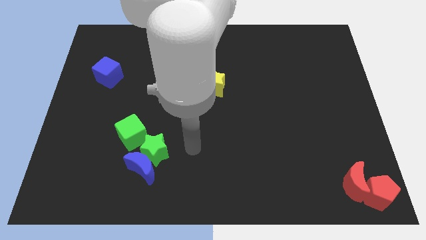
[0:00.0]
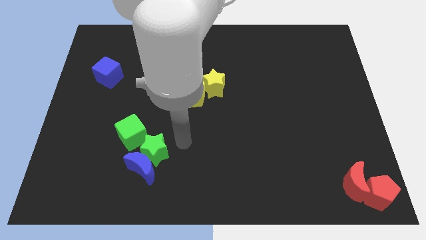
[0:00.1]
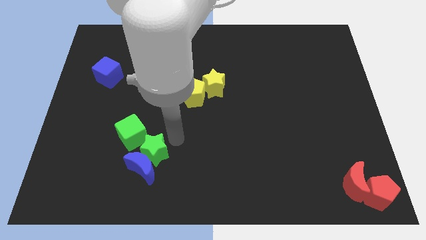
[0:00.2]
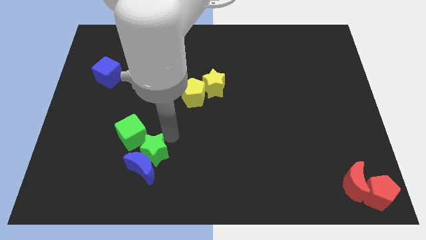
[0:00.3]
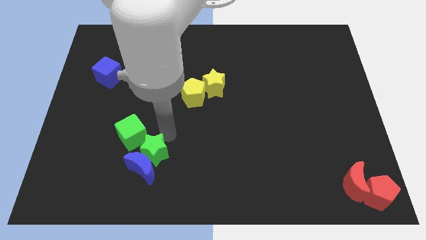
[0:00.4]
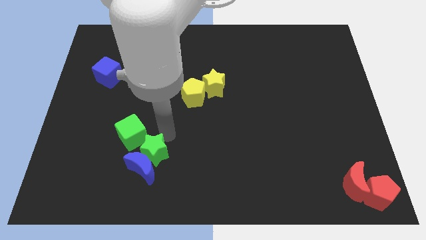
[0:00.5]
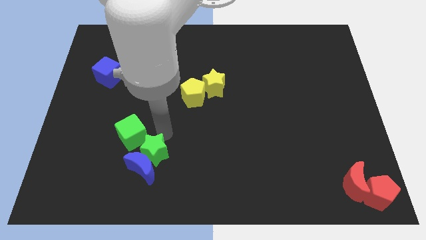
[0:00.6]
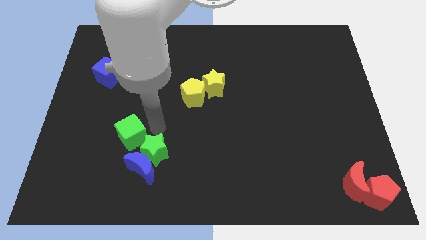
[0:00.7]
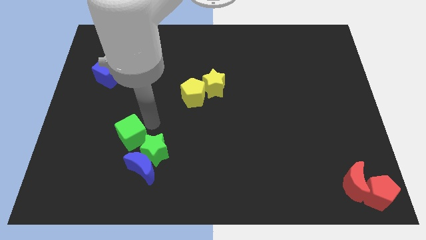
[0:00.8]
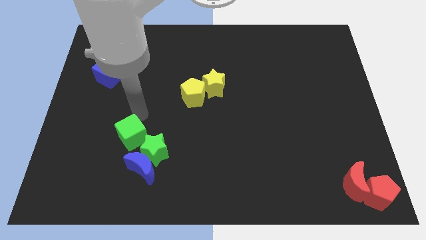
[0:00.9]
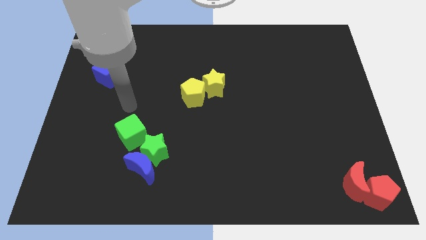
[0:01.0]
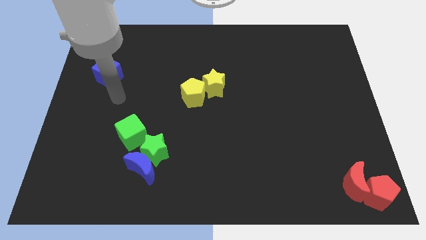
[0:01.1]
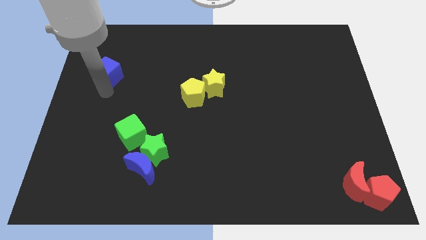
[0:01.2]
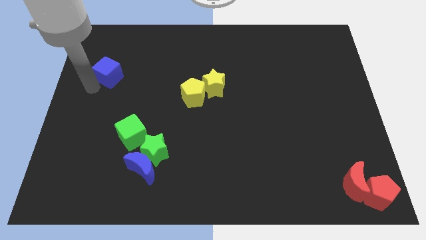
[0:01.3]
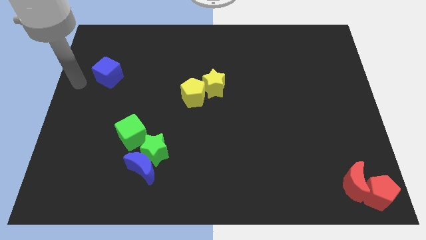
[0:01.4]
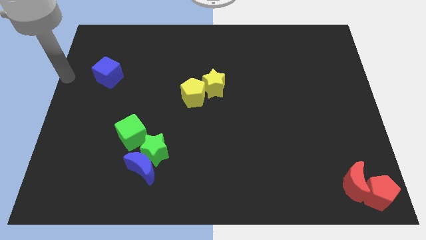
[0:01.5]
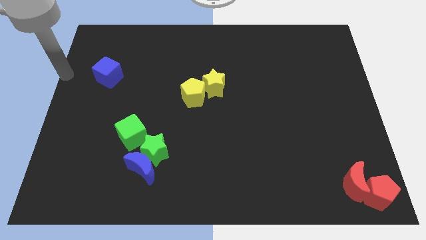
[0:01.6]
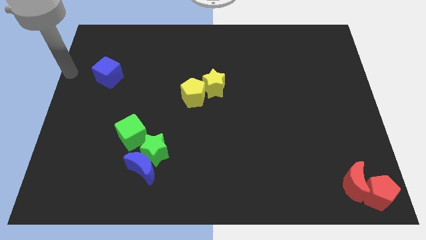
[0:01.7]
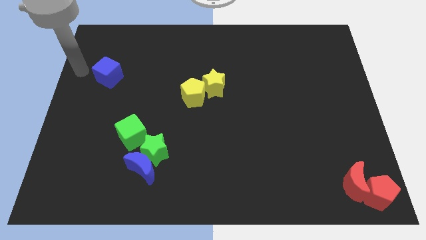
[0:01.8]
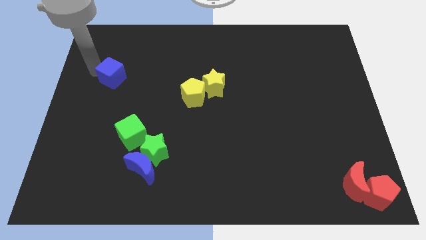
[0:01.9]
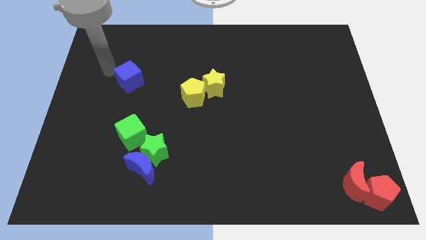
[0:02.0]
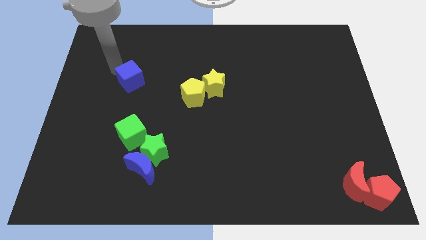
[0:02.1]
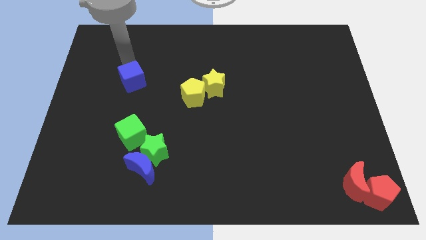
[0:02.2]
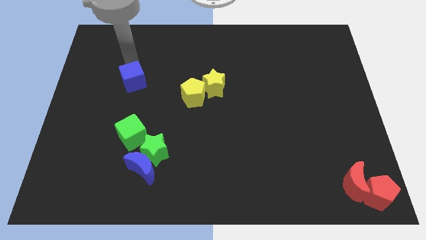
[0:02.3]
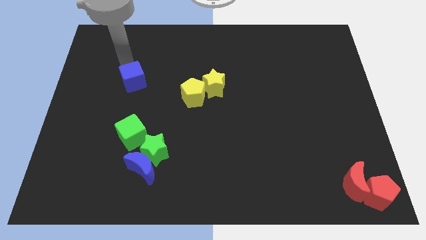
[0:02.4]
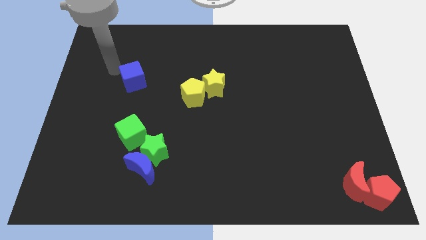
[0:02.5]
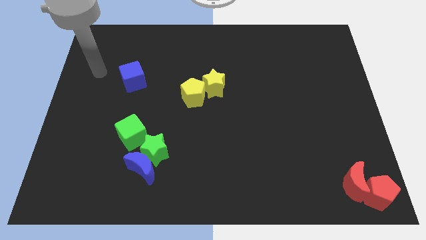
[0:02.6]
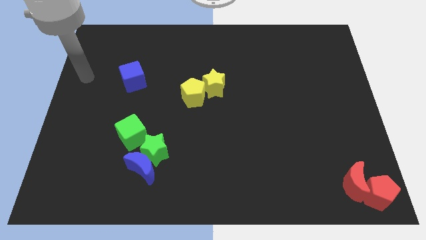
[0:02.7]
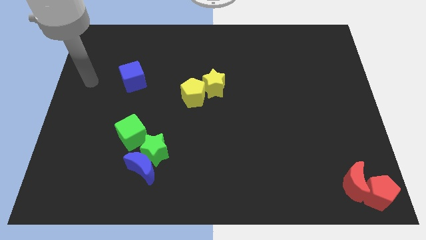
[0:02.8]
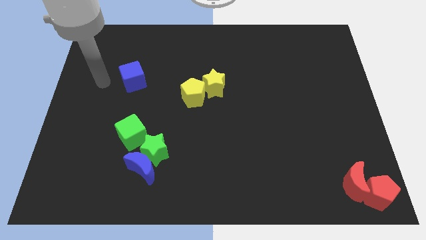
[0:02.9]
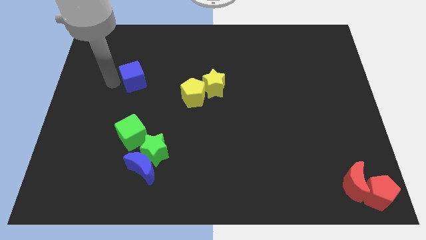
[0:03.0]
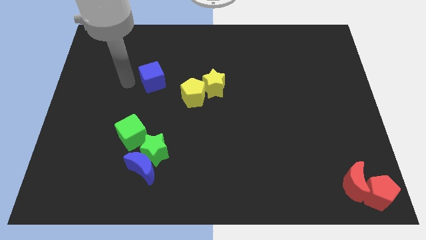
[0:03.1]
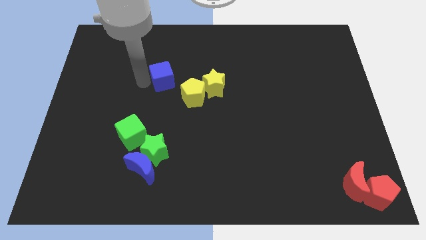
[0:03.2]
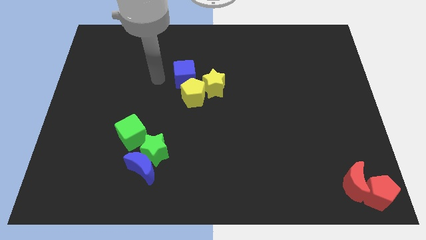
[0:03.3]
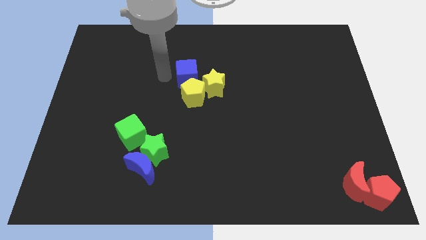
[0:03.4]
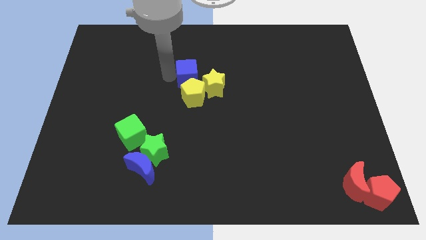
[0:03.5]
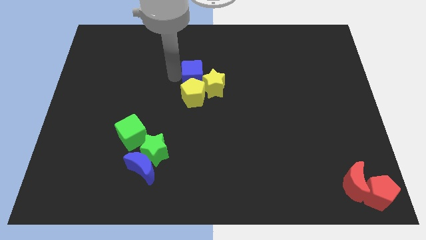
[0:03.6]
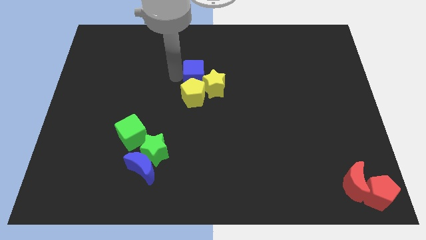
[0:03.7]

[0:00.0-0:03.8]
drag the blue cube to the top side of the yellow pentagon

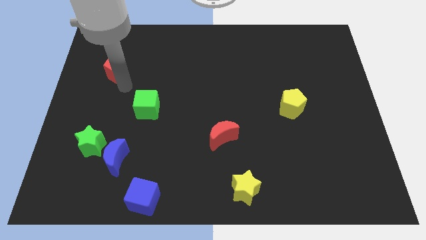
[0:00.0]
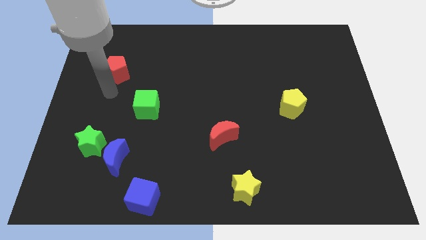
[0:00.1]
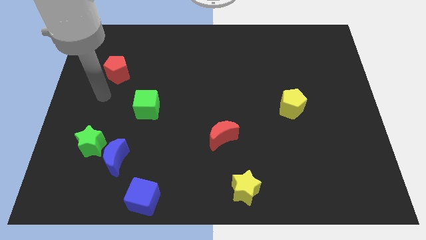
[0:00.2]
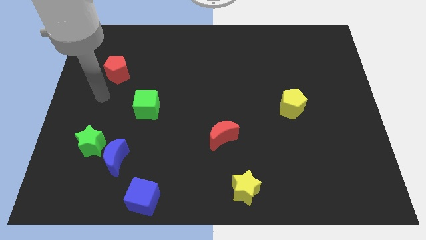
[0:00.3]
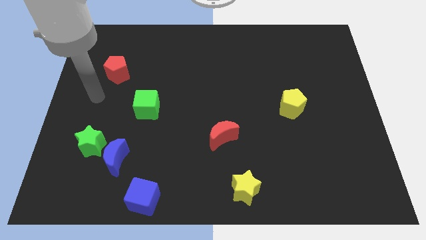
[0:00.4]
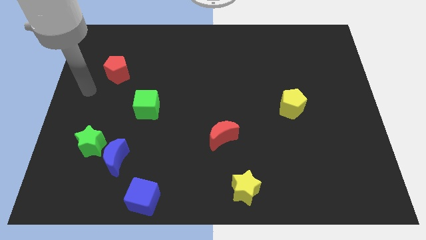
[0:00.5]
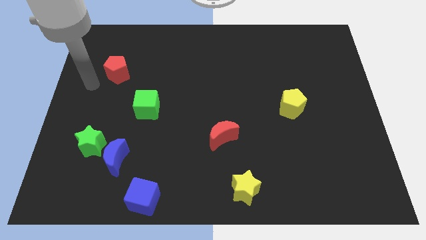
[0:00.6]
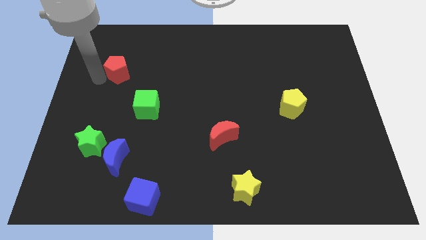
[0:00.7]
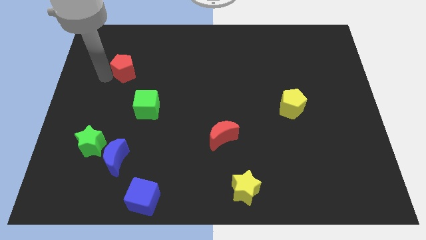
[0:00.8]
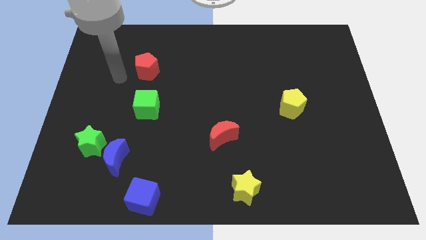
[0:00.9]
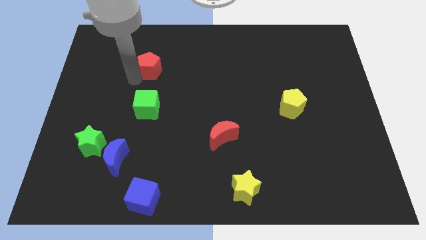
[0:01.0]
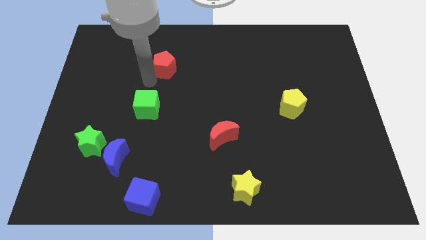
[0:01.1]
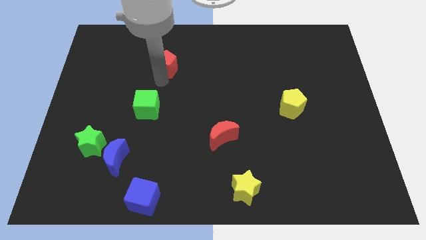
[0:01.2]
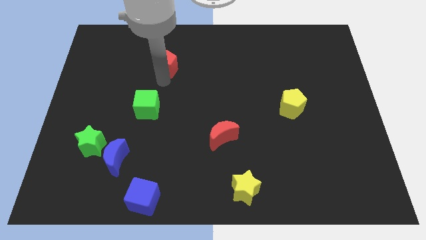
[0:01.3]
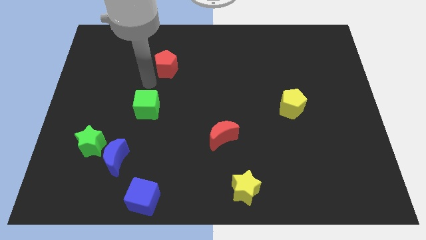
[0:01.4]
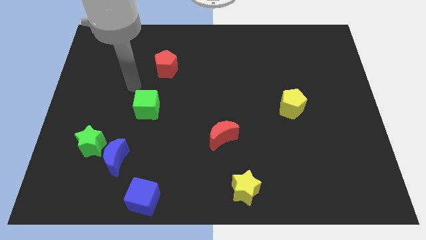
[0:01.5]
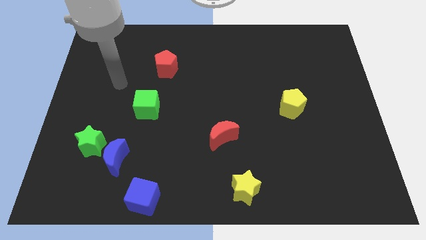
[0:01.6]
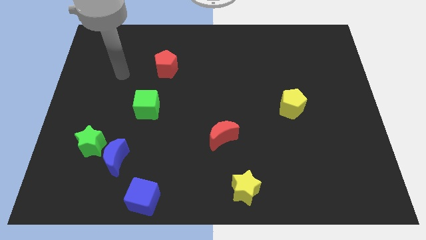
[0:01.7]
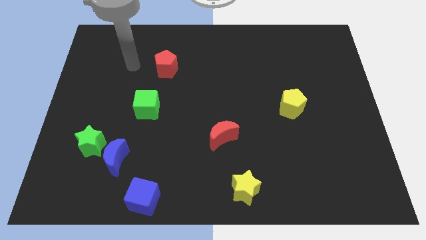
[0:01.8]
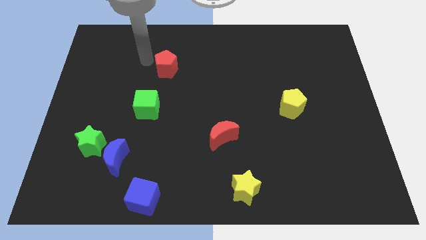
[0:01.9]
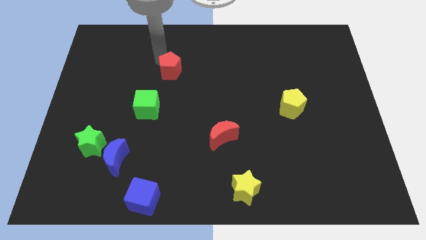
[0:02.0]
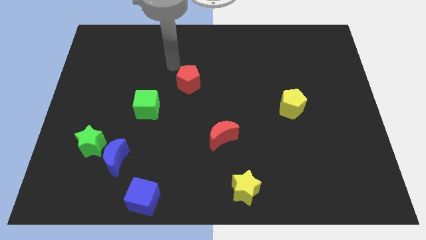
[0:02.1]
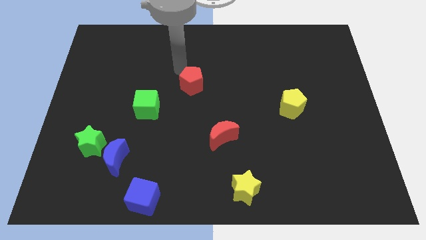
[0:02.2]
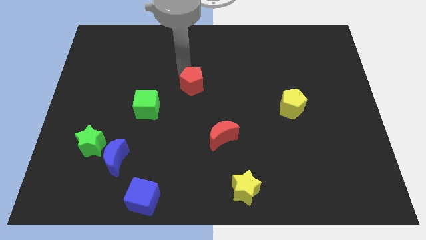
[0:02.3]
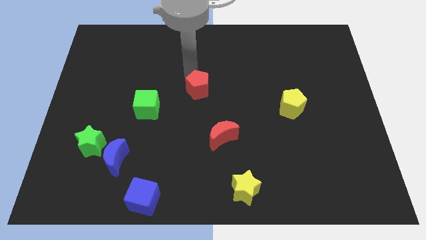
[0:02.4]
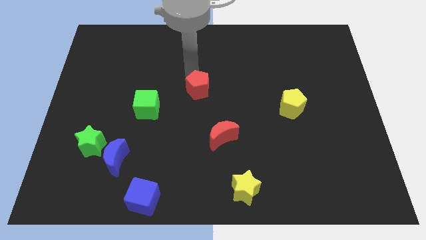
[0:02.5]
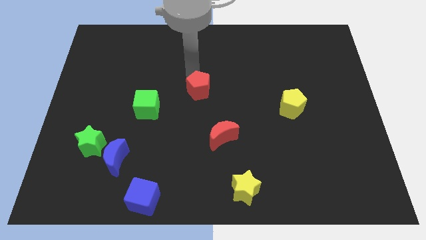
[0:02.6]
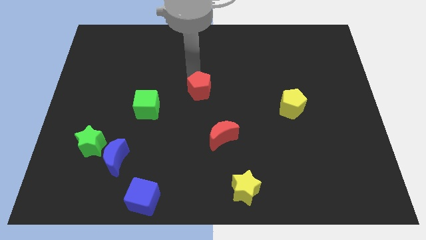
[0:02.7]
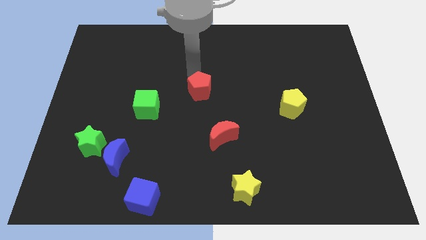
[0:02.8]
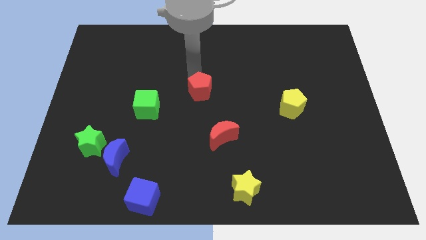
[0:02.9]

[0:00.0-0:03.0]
move the red pentagon to the center of the board

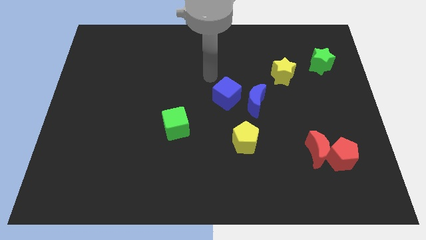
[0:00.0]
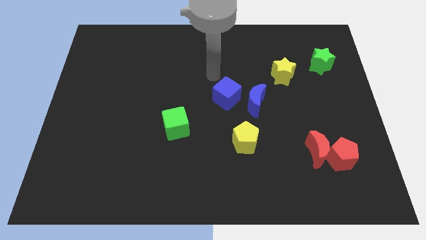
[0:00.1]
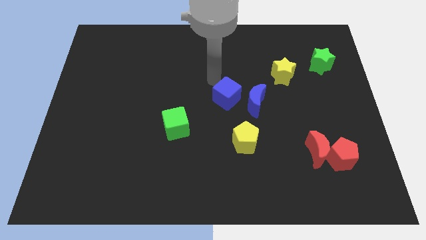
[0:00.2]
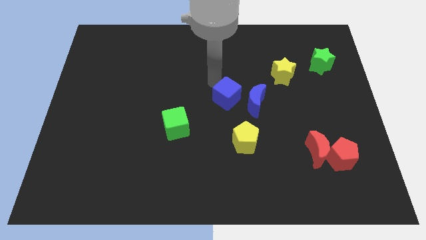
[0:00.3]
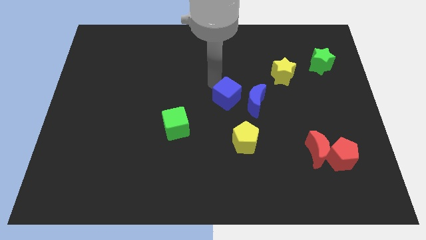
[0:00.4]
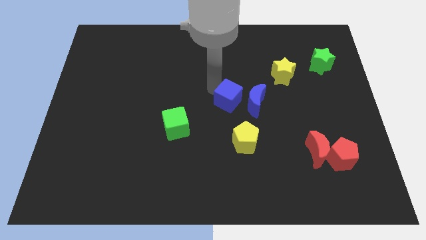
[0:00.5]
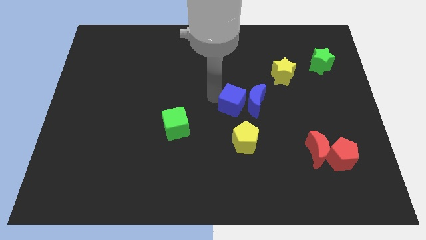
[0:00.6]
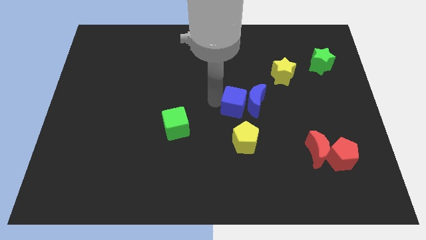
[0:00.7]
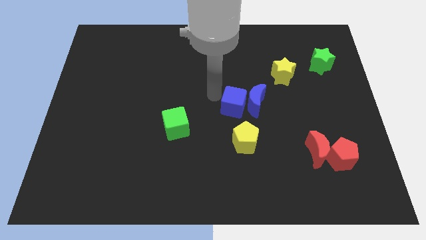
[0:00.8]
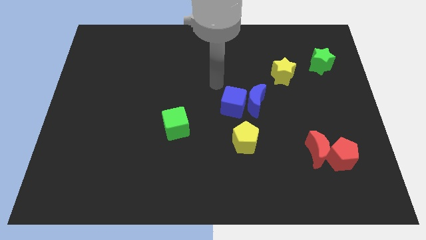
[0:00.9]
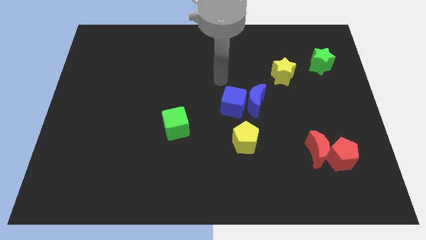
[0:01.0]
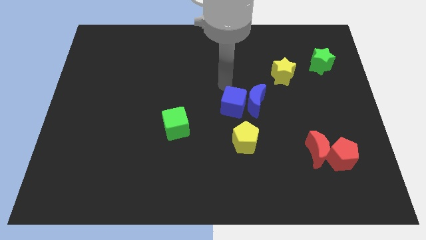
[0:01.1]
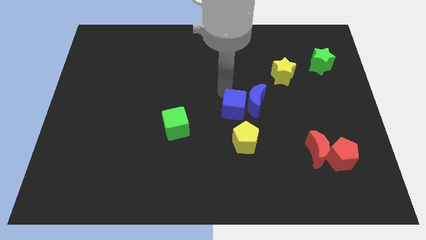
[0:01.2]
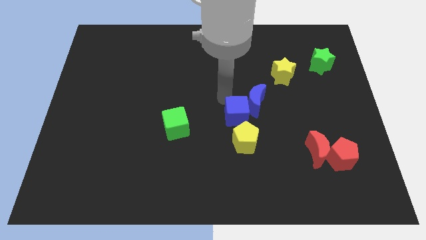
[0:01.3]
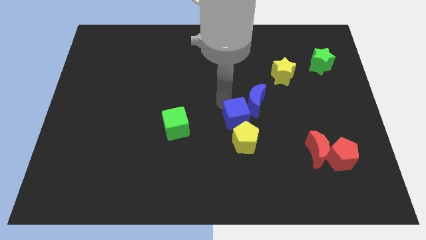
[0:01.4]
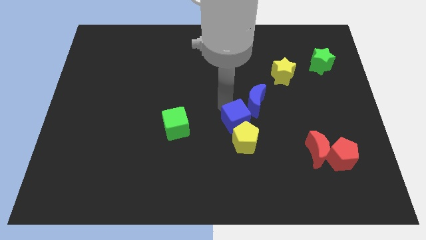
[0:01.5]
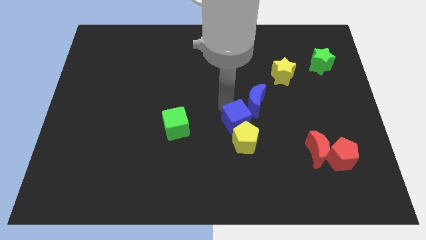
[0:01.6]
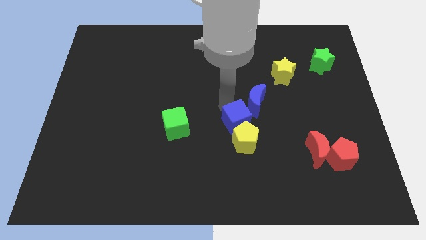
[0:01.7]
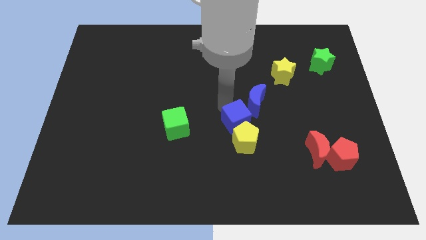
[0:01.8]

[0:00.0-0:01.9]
push the blue cube towards the yellow pentagon

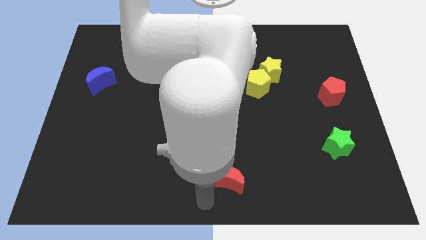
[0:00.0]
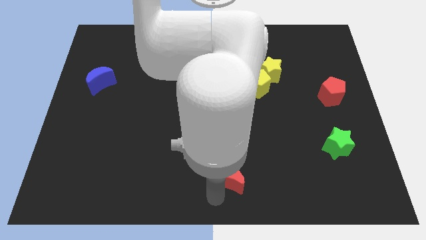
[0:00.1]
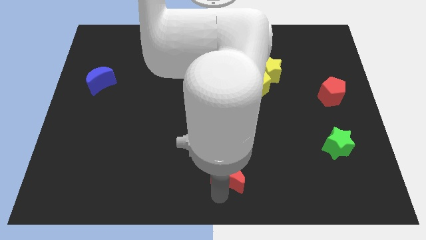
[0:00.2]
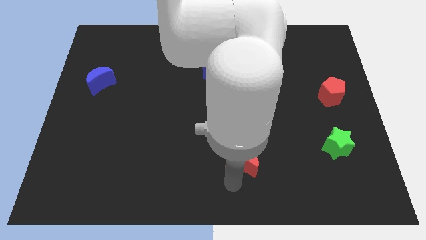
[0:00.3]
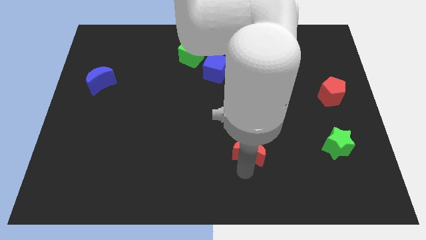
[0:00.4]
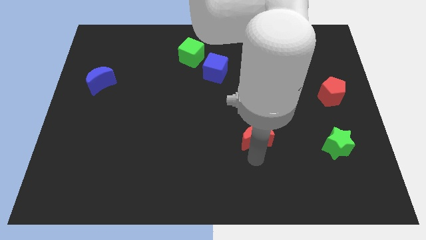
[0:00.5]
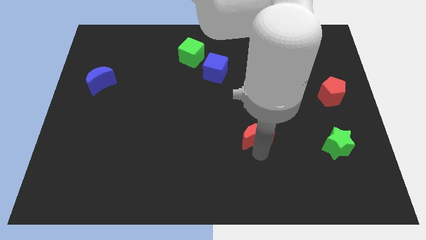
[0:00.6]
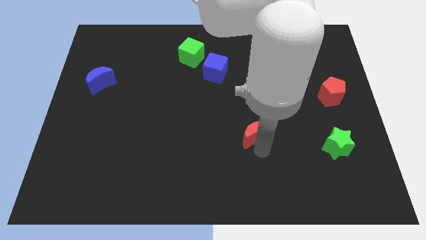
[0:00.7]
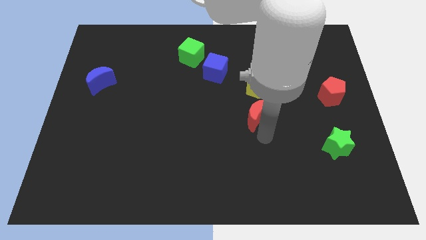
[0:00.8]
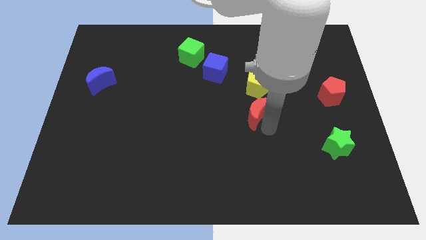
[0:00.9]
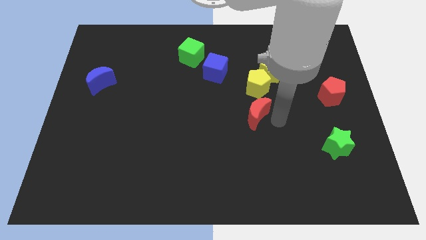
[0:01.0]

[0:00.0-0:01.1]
move the red moon below the yellow penatgon
